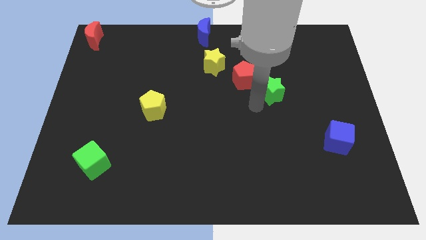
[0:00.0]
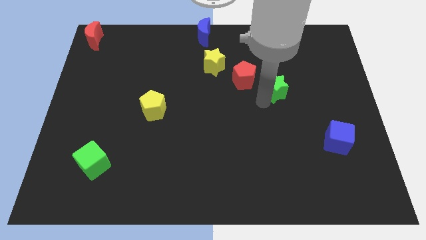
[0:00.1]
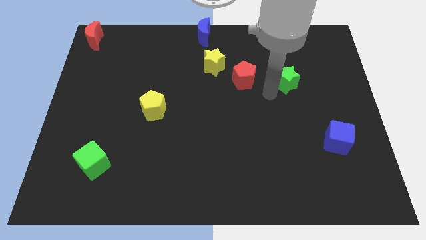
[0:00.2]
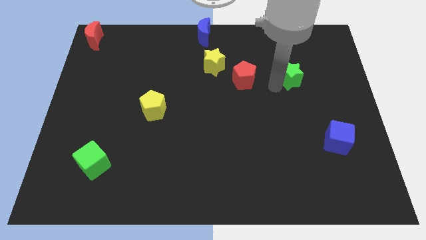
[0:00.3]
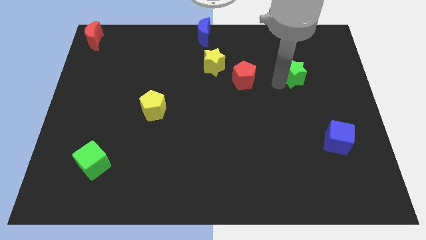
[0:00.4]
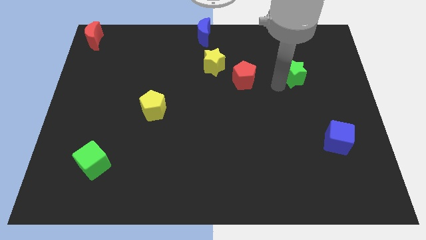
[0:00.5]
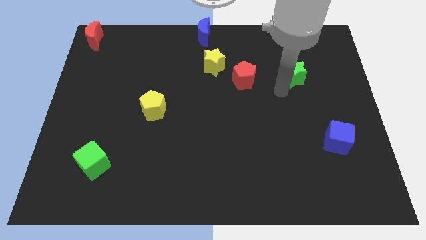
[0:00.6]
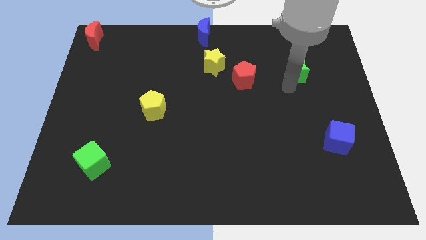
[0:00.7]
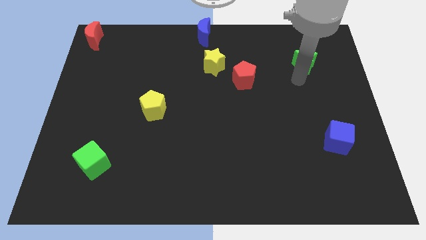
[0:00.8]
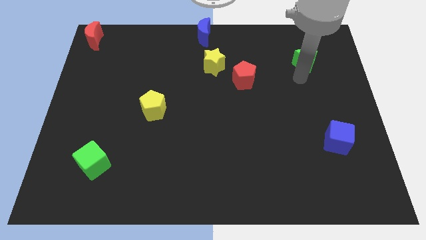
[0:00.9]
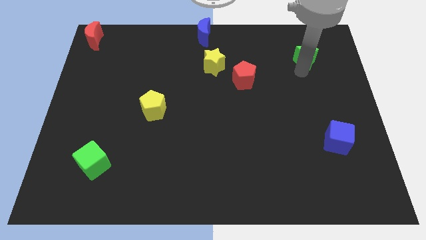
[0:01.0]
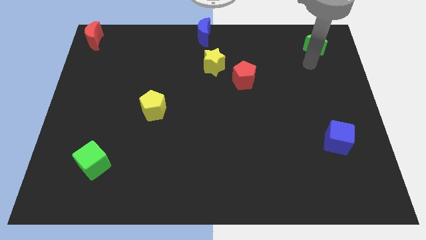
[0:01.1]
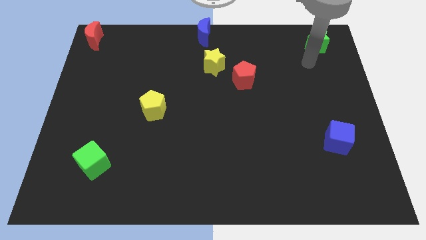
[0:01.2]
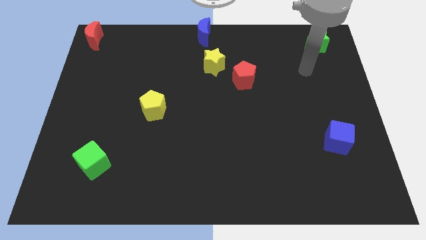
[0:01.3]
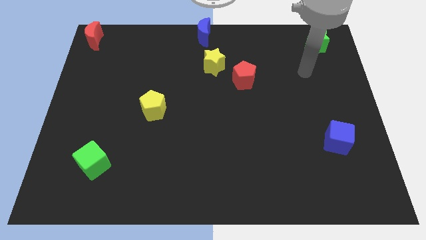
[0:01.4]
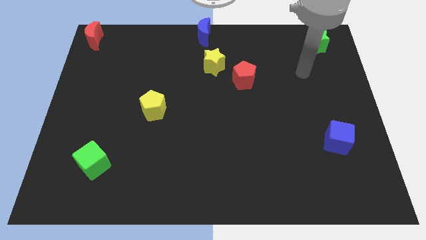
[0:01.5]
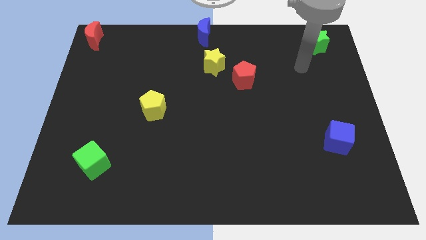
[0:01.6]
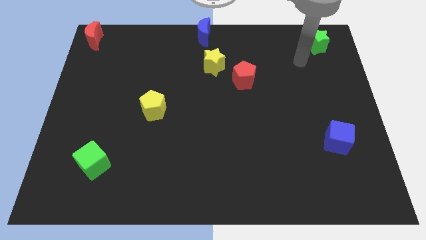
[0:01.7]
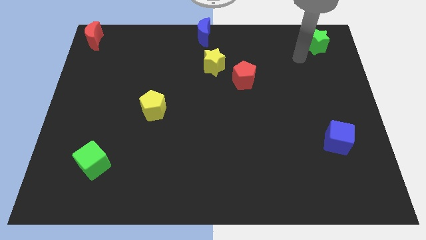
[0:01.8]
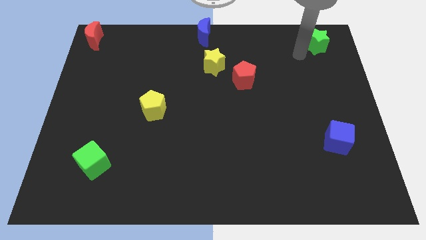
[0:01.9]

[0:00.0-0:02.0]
place the green star to top right corner of the board

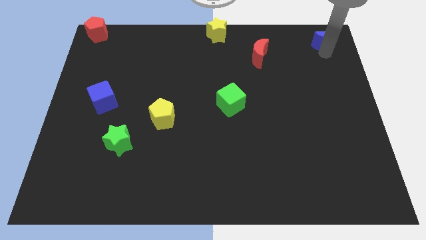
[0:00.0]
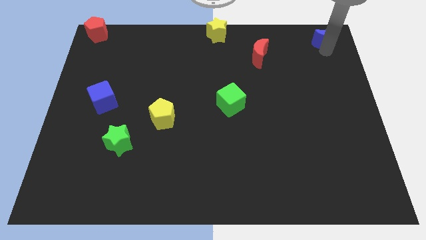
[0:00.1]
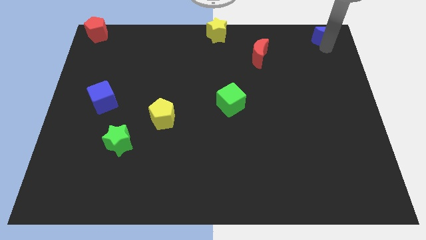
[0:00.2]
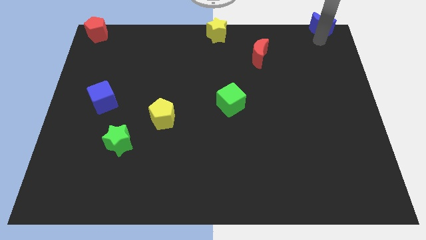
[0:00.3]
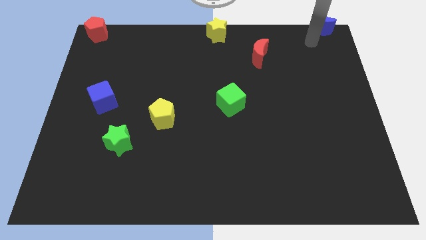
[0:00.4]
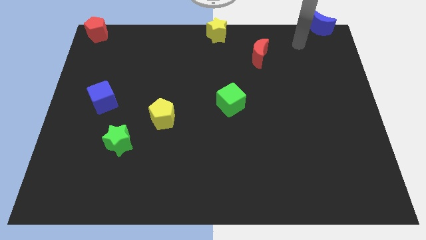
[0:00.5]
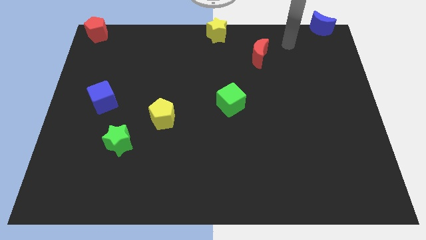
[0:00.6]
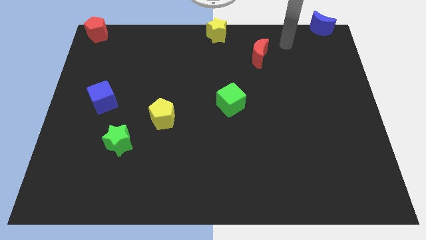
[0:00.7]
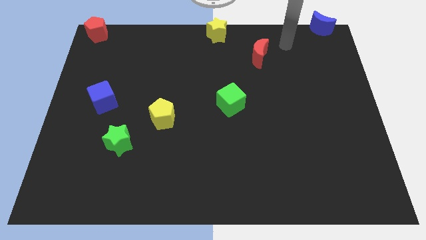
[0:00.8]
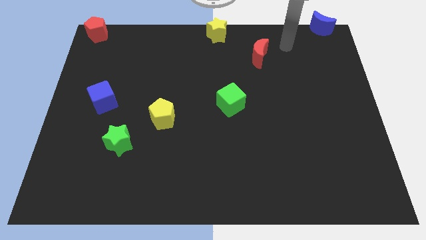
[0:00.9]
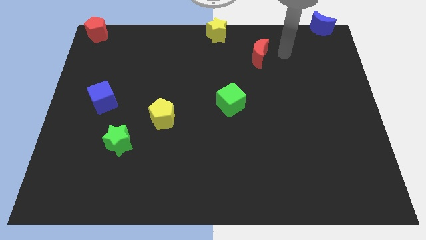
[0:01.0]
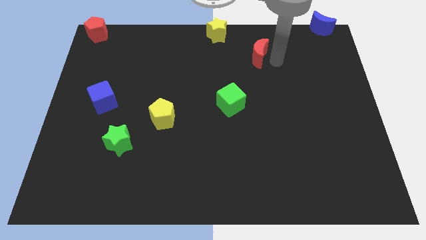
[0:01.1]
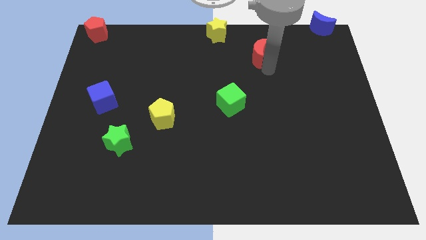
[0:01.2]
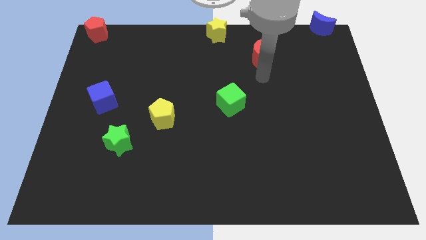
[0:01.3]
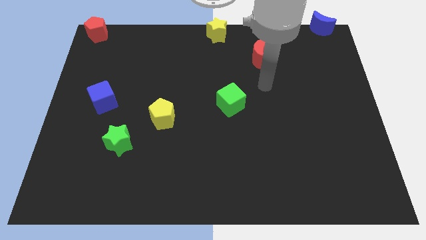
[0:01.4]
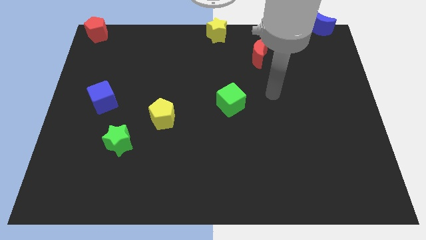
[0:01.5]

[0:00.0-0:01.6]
push the blue moon to the top right

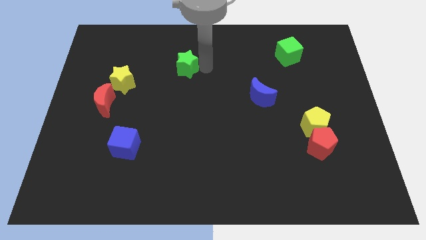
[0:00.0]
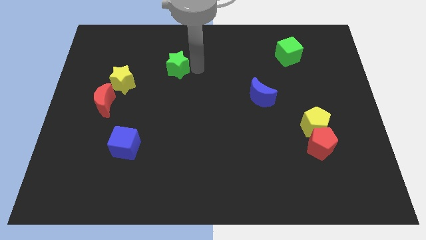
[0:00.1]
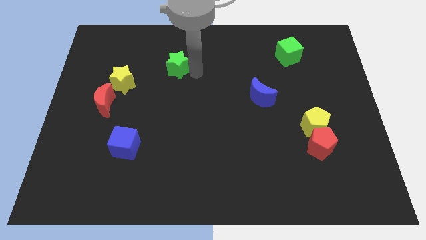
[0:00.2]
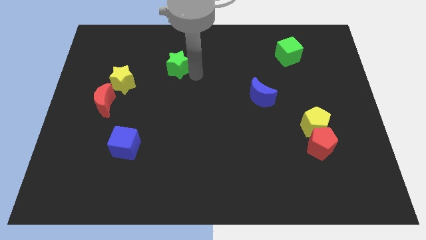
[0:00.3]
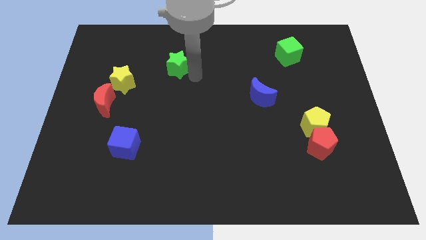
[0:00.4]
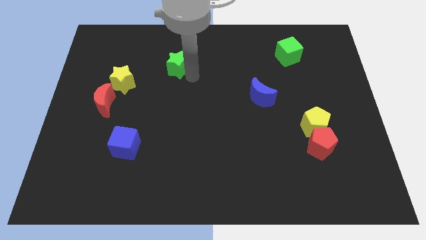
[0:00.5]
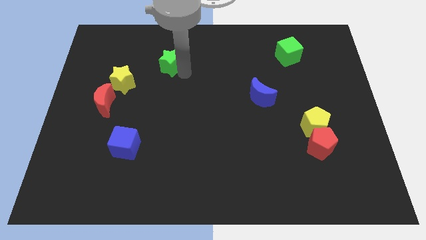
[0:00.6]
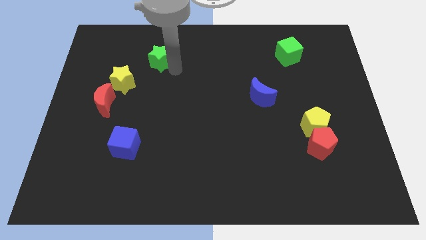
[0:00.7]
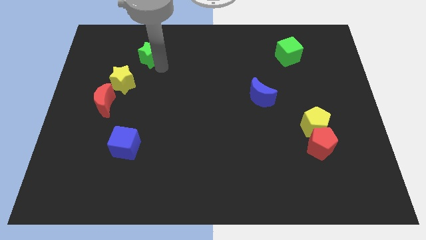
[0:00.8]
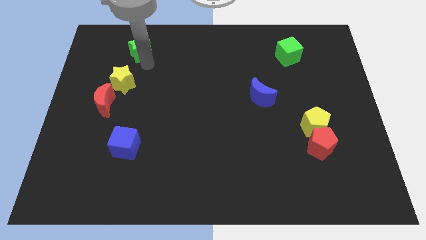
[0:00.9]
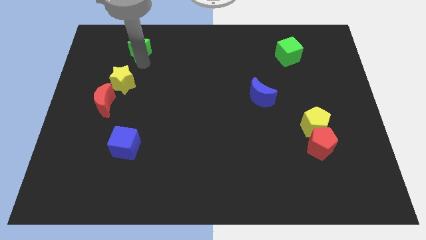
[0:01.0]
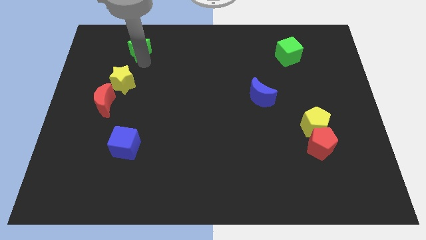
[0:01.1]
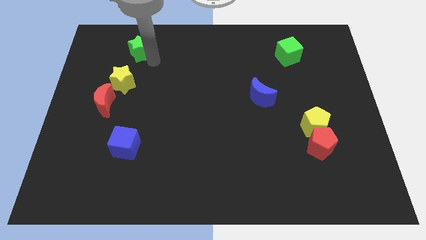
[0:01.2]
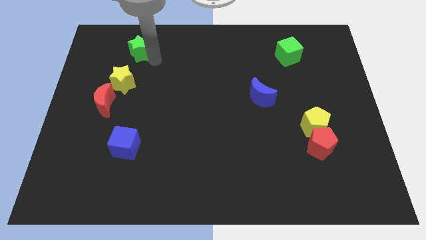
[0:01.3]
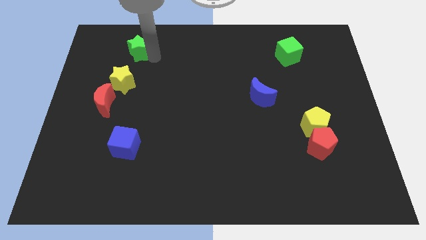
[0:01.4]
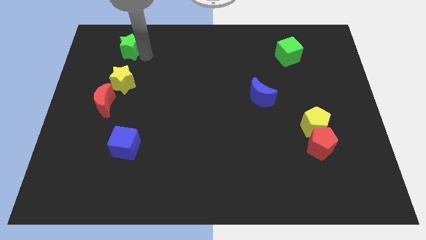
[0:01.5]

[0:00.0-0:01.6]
put the green star above the yellow star

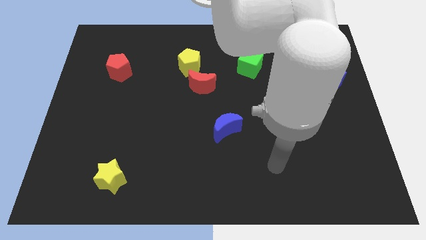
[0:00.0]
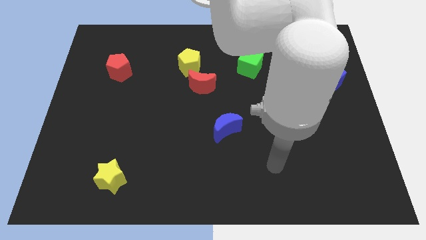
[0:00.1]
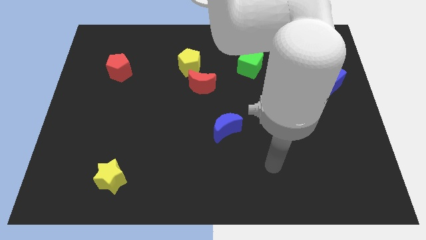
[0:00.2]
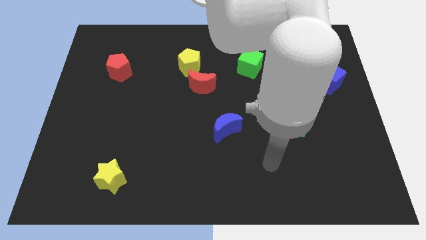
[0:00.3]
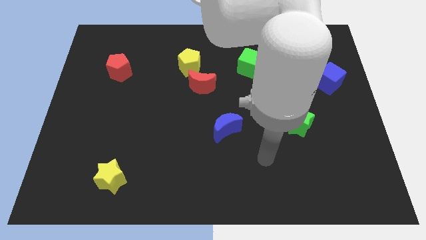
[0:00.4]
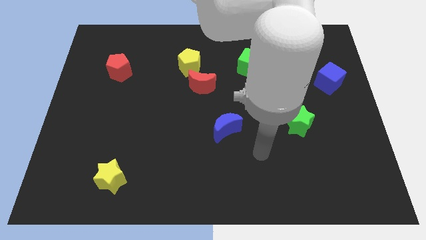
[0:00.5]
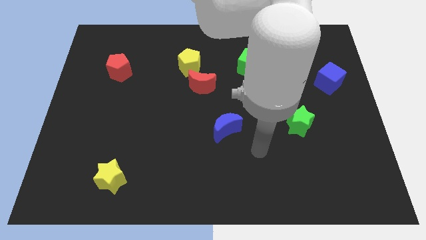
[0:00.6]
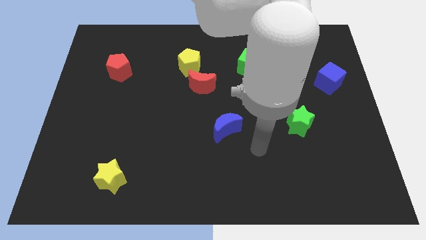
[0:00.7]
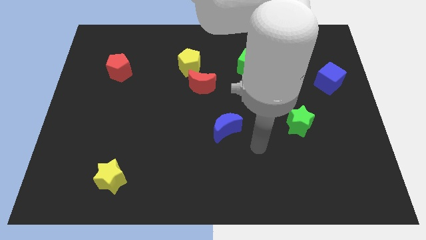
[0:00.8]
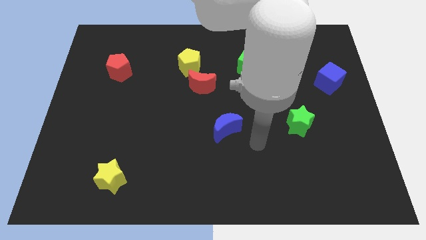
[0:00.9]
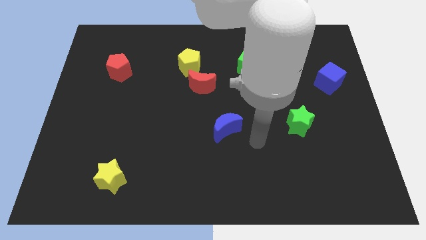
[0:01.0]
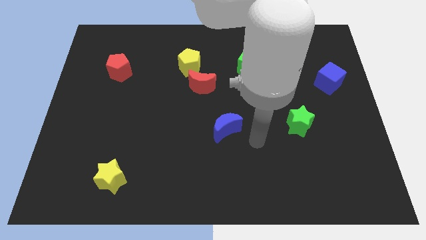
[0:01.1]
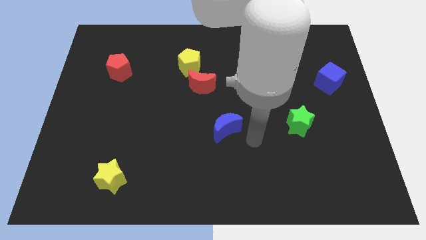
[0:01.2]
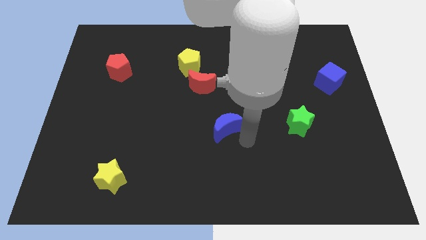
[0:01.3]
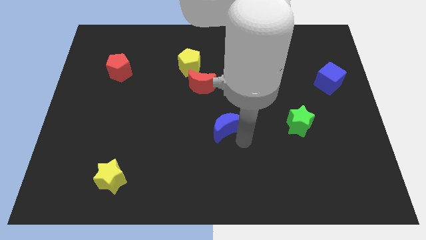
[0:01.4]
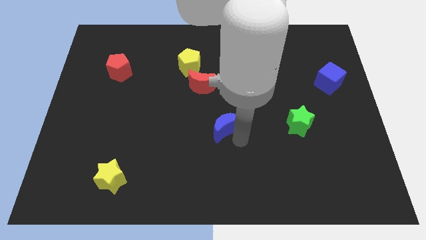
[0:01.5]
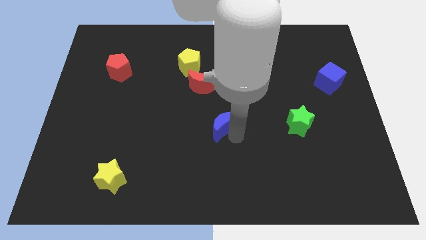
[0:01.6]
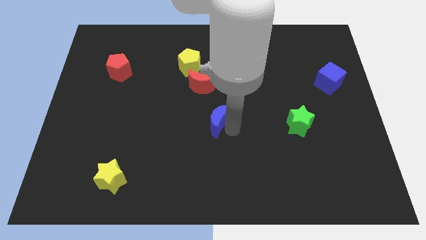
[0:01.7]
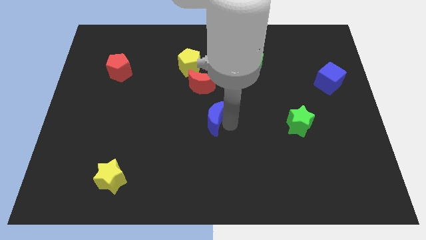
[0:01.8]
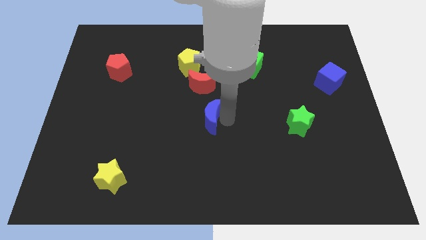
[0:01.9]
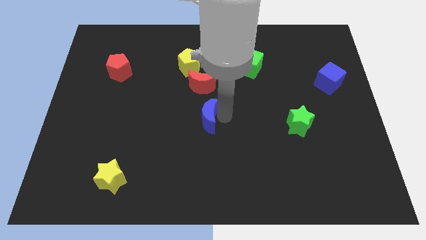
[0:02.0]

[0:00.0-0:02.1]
push the blue crescent towards red moon

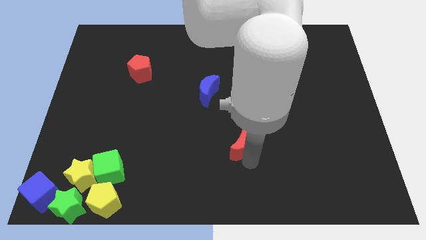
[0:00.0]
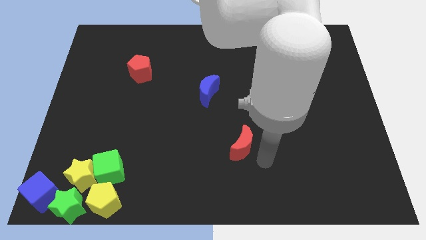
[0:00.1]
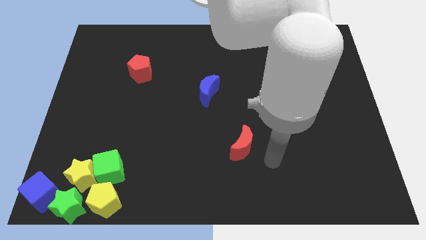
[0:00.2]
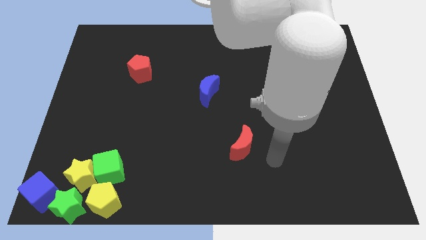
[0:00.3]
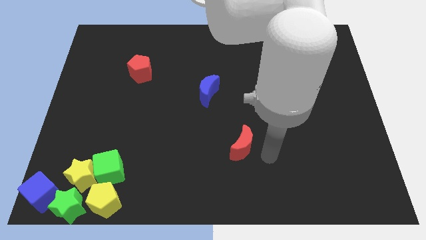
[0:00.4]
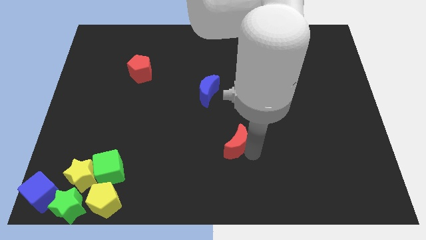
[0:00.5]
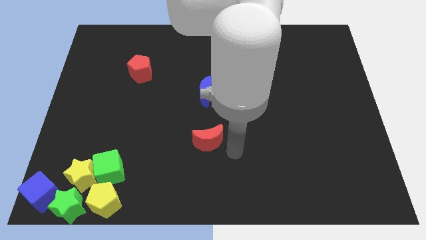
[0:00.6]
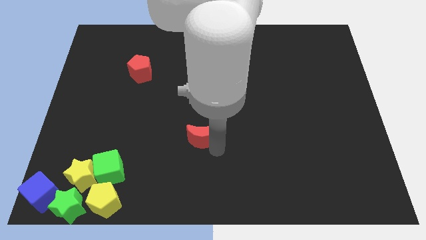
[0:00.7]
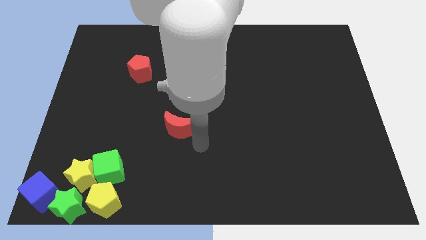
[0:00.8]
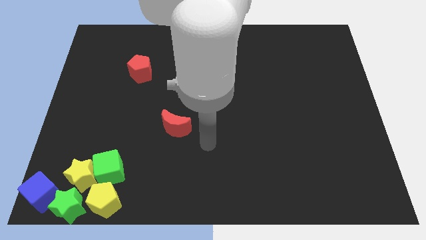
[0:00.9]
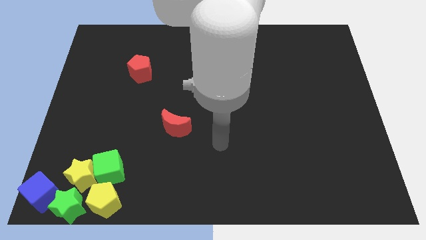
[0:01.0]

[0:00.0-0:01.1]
push the red moon diagonally to the bottom left of the blue moon

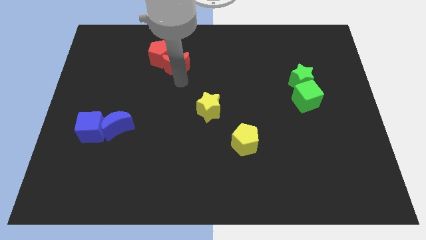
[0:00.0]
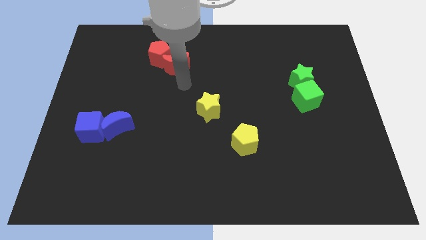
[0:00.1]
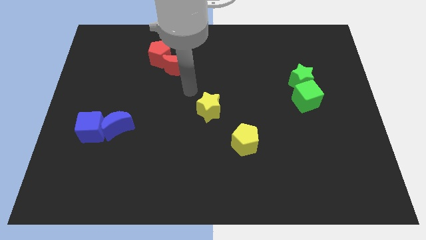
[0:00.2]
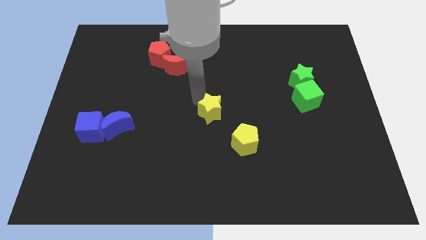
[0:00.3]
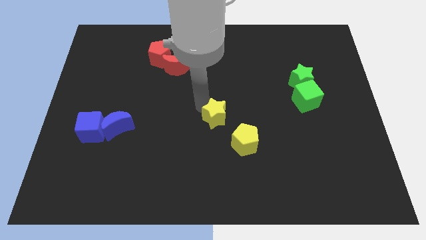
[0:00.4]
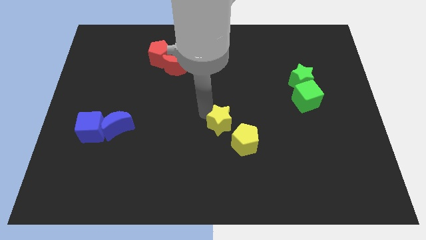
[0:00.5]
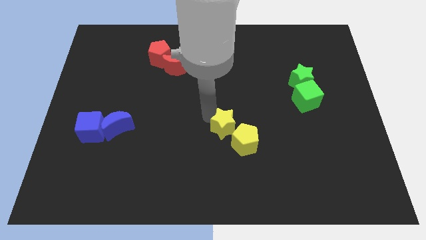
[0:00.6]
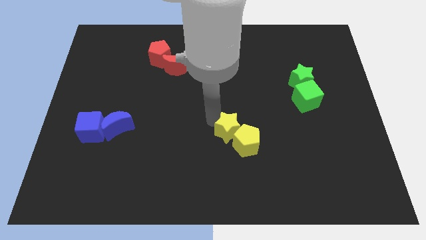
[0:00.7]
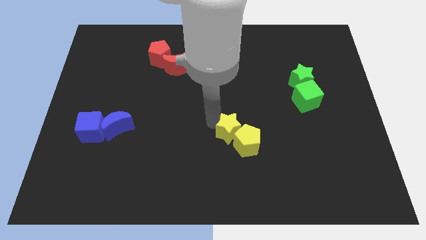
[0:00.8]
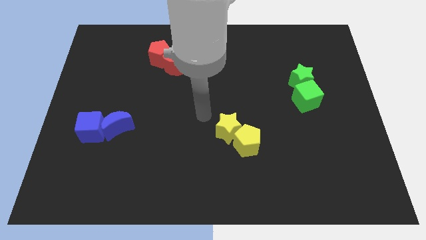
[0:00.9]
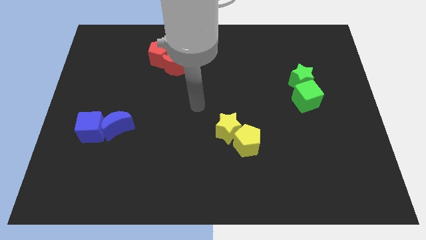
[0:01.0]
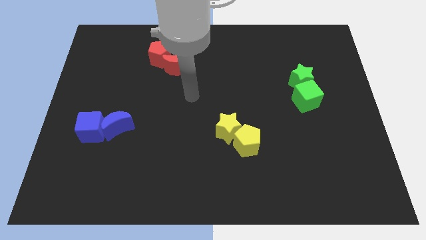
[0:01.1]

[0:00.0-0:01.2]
move the yellow star into the yellow pentagon
